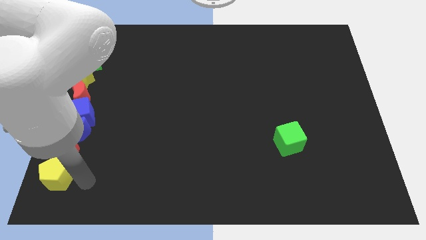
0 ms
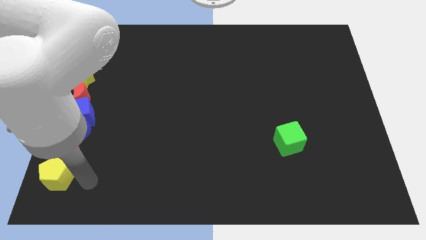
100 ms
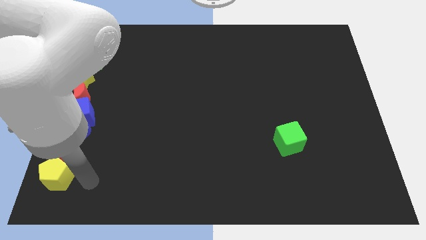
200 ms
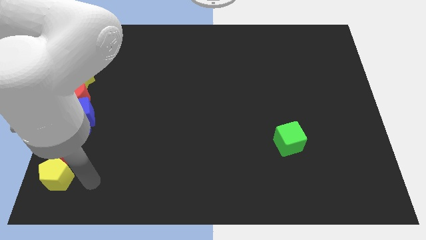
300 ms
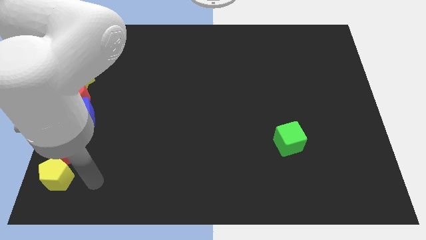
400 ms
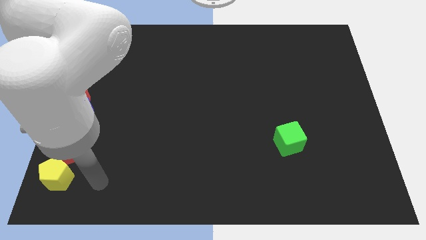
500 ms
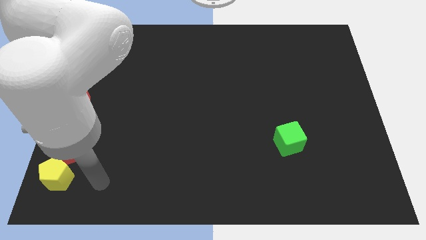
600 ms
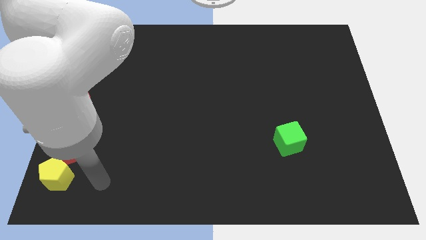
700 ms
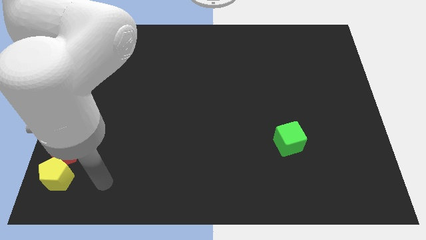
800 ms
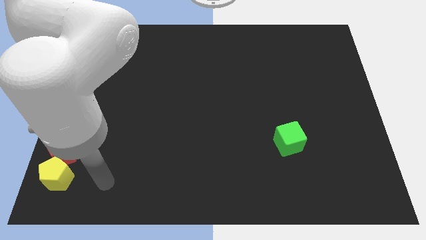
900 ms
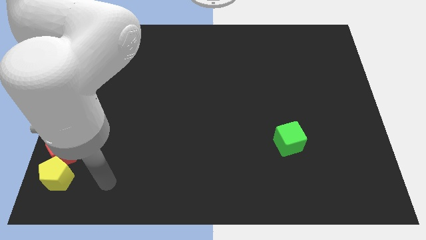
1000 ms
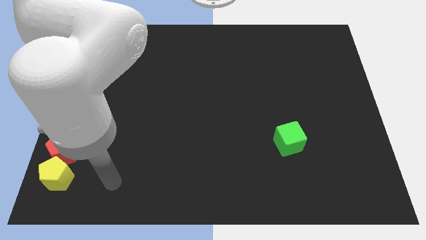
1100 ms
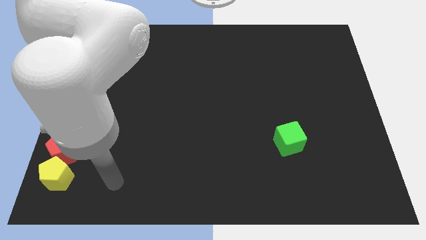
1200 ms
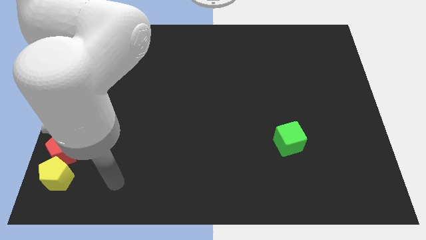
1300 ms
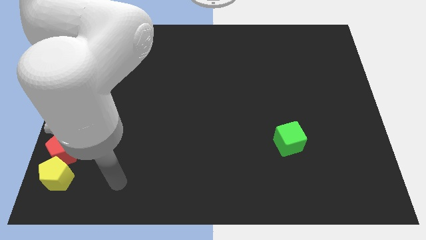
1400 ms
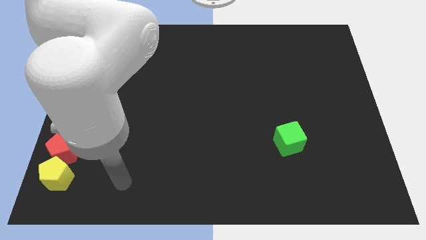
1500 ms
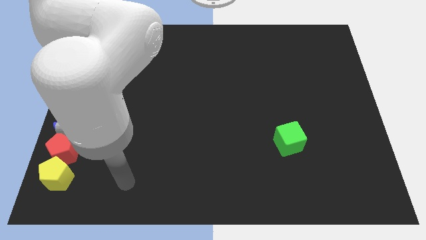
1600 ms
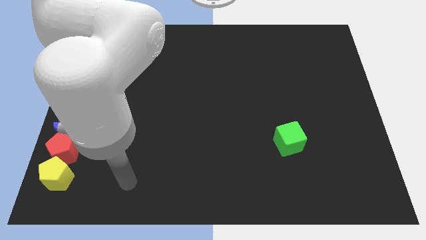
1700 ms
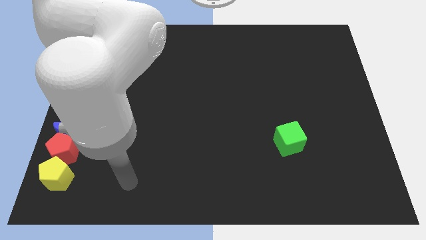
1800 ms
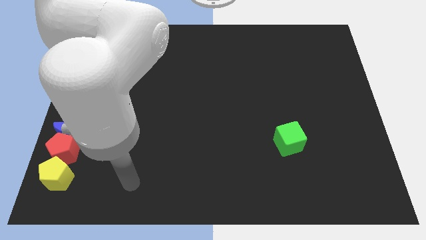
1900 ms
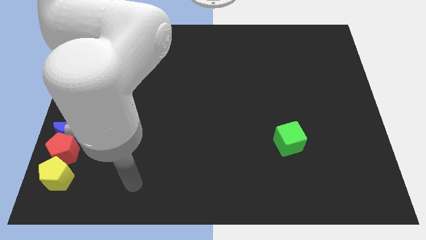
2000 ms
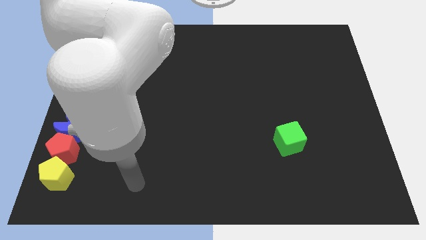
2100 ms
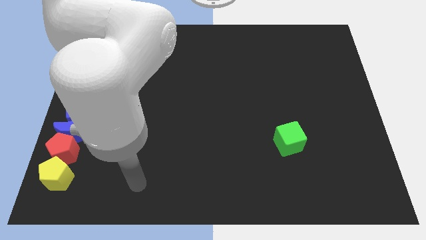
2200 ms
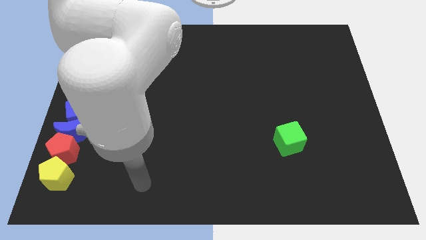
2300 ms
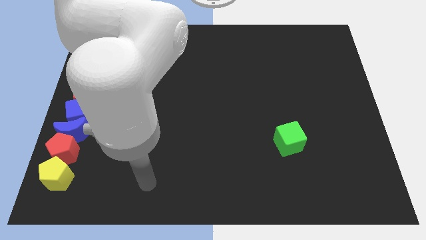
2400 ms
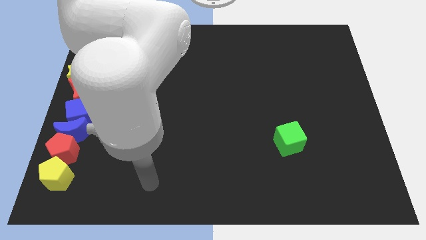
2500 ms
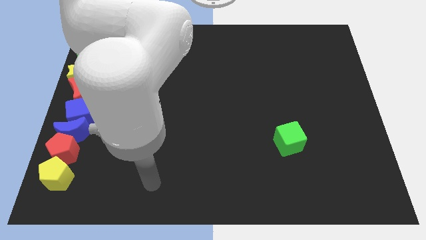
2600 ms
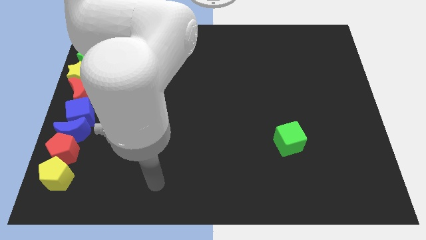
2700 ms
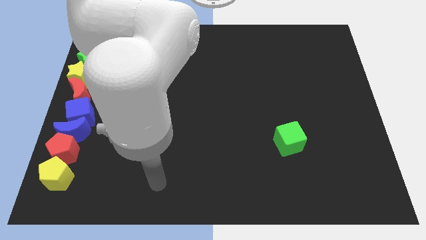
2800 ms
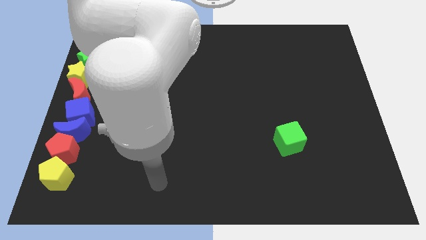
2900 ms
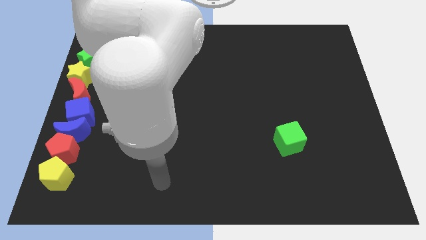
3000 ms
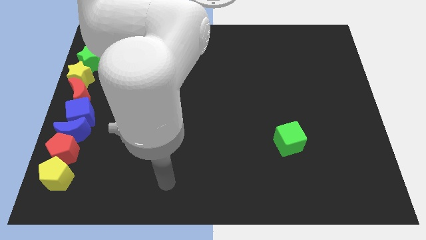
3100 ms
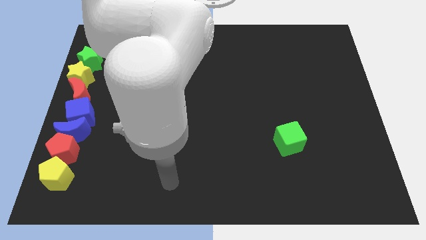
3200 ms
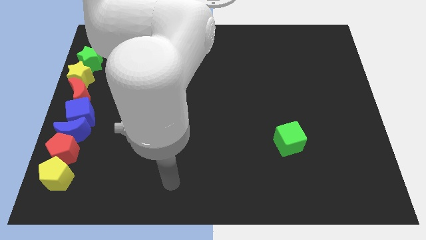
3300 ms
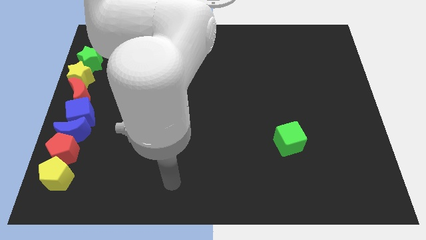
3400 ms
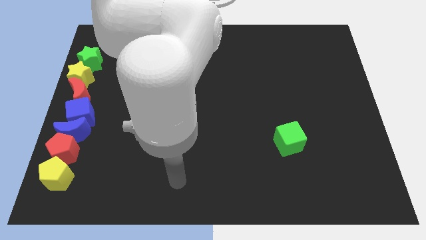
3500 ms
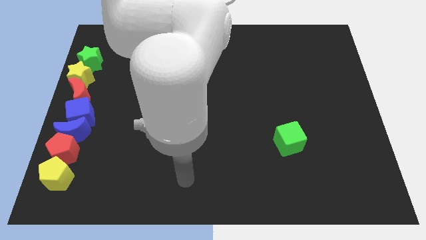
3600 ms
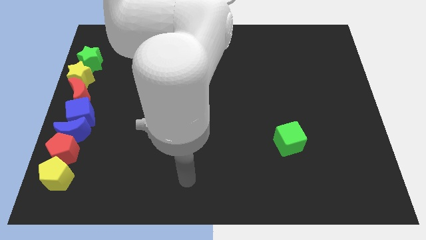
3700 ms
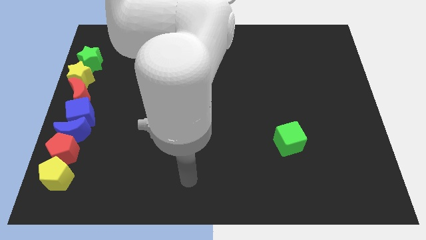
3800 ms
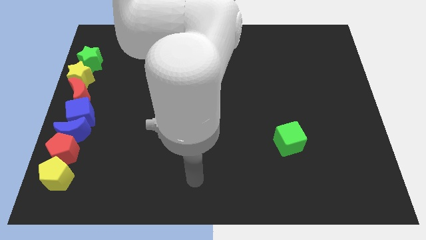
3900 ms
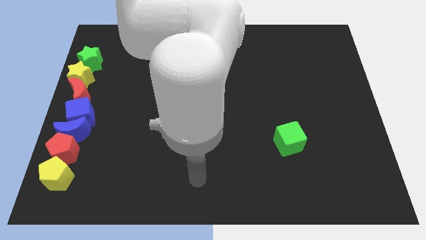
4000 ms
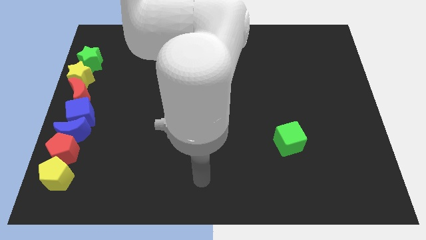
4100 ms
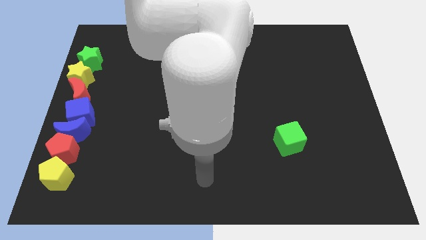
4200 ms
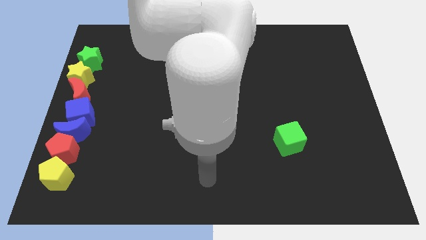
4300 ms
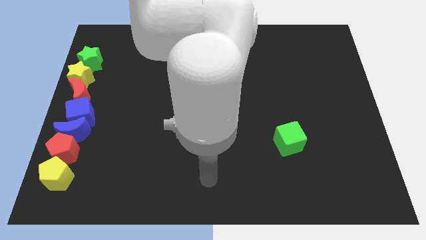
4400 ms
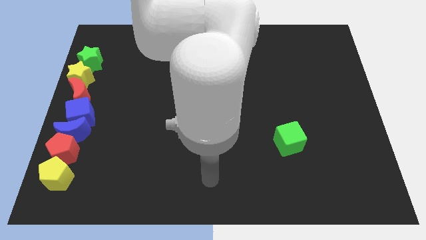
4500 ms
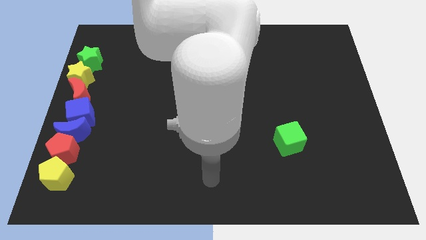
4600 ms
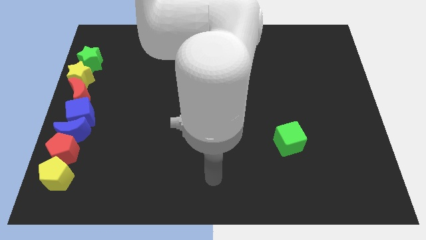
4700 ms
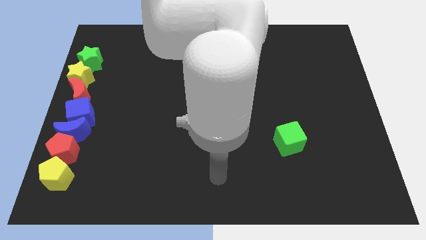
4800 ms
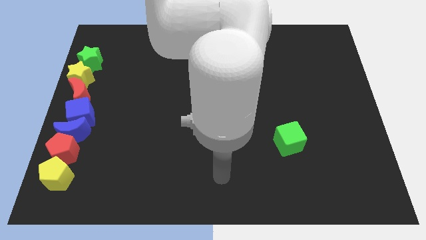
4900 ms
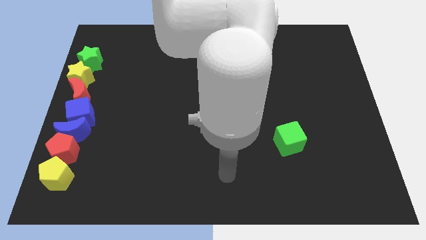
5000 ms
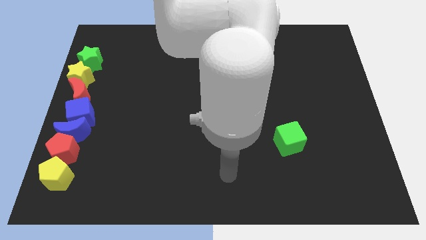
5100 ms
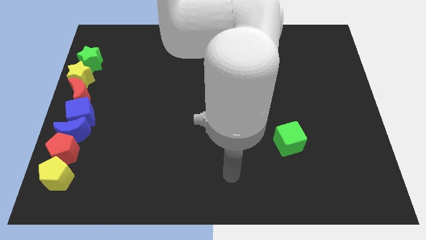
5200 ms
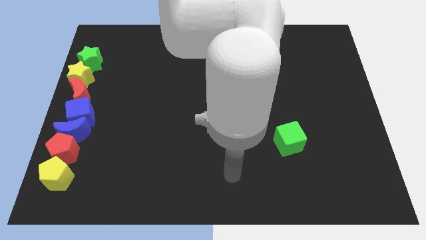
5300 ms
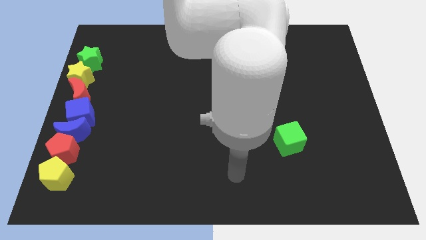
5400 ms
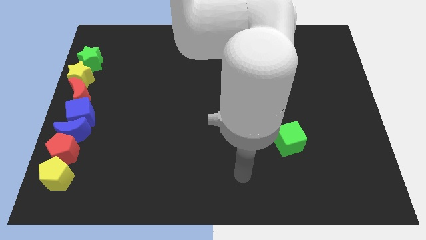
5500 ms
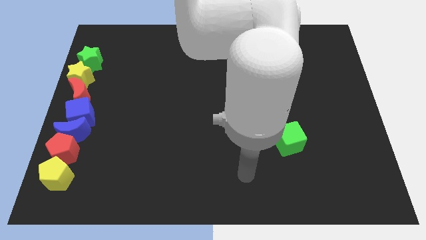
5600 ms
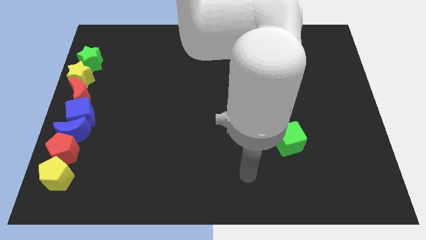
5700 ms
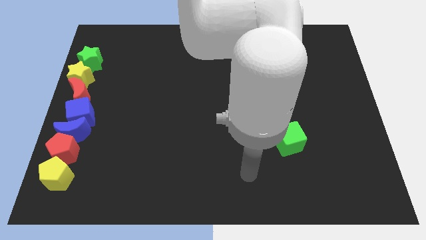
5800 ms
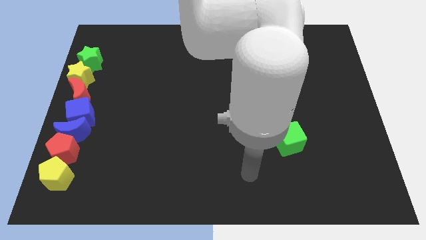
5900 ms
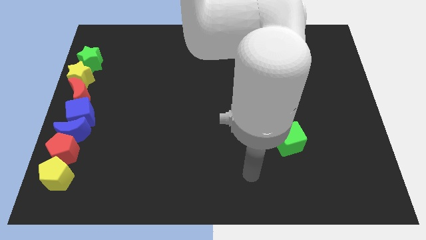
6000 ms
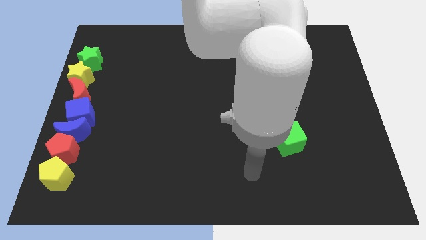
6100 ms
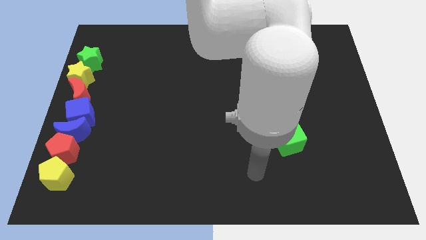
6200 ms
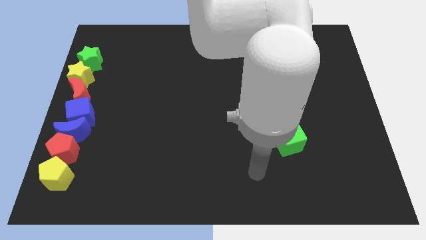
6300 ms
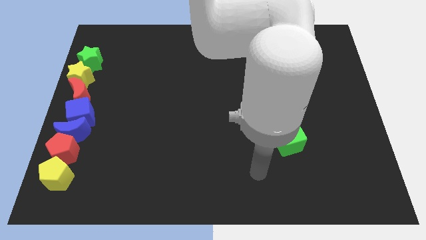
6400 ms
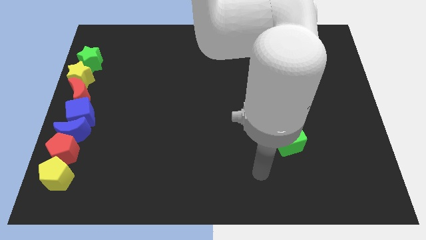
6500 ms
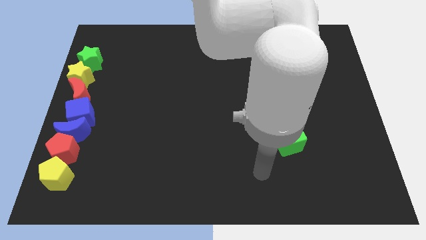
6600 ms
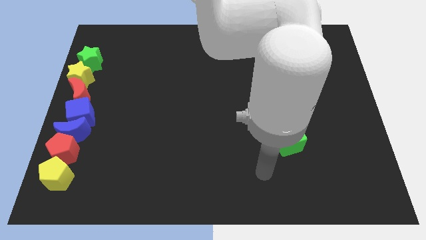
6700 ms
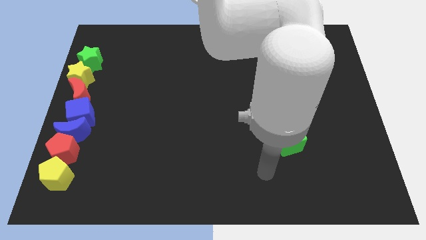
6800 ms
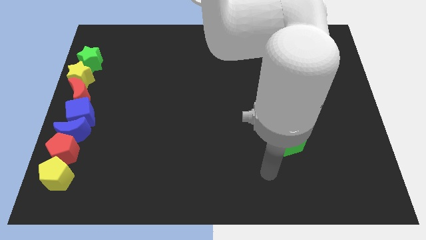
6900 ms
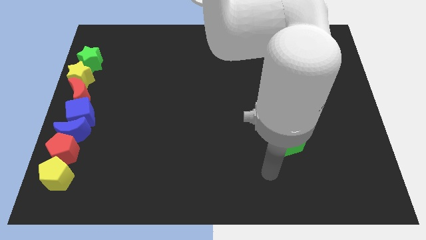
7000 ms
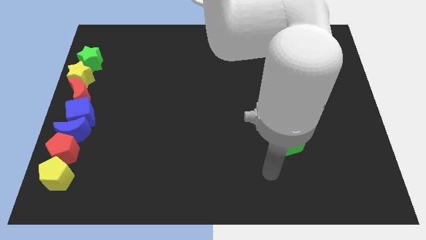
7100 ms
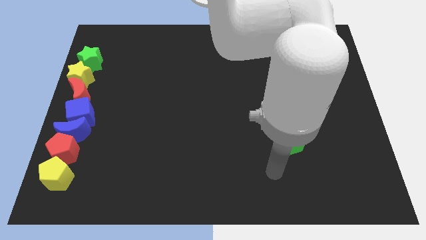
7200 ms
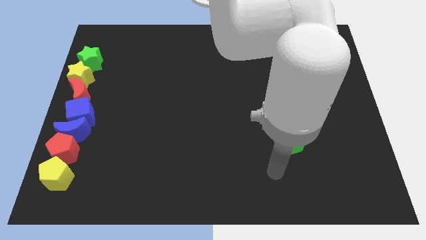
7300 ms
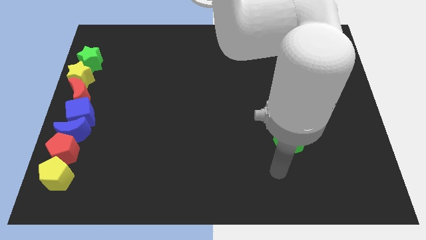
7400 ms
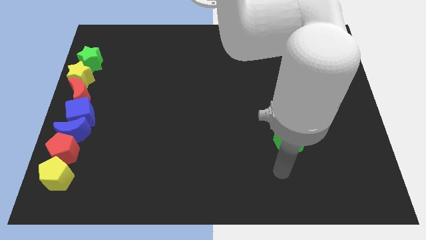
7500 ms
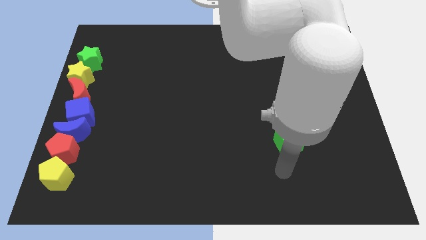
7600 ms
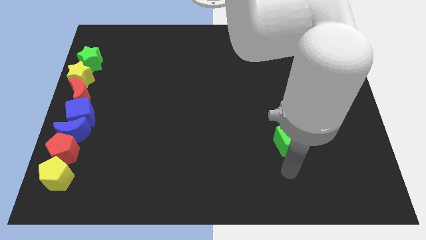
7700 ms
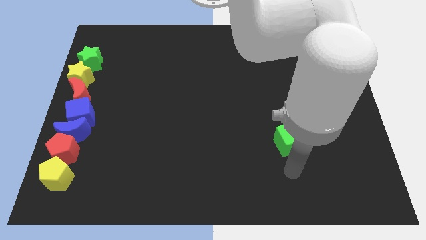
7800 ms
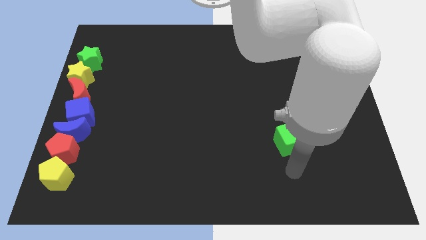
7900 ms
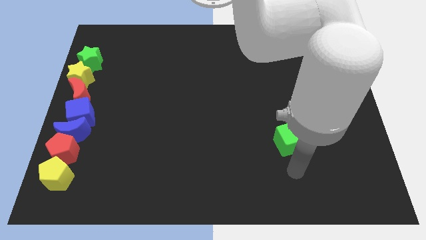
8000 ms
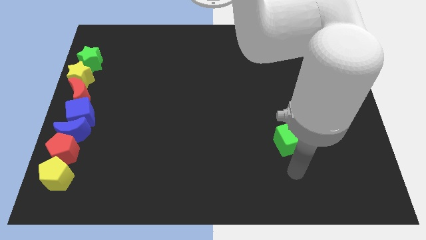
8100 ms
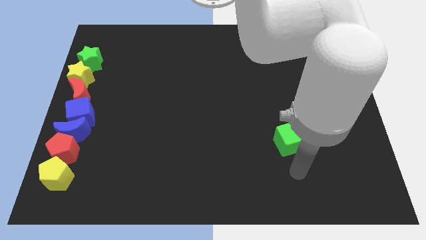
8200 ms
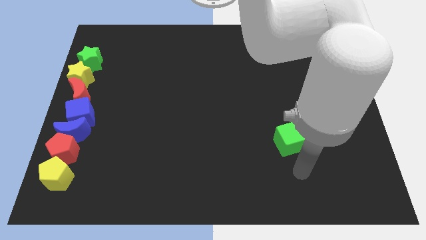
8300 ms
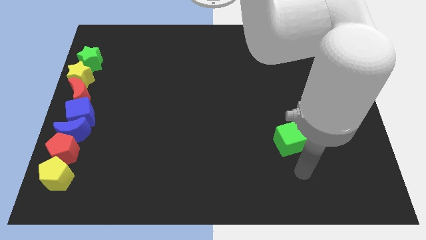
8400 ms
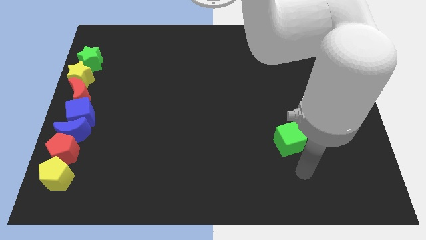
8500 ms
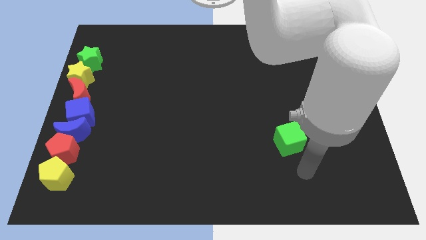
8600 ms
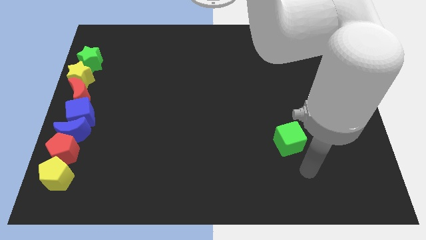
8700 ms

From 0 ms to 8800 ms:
move your arm to the bottom of the green cube

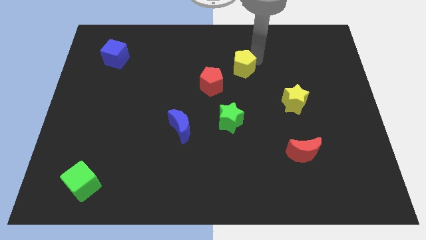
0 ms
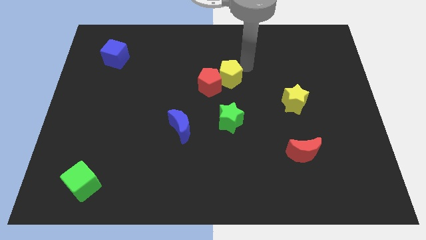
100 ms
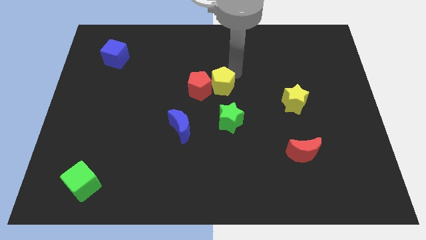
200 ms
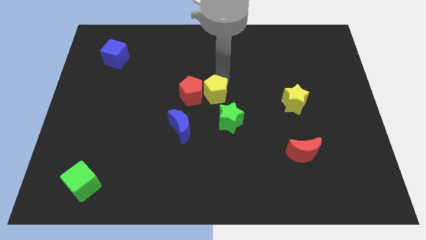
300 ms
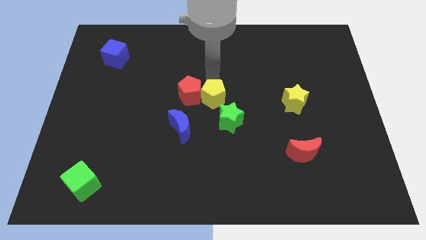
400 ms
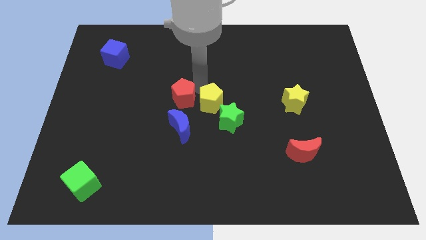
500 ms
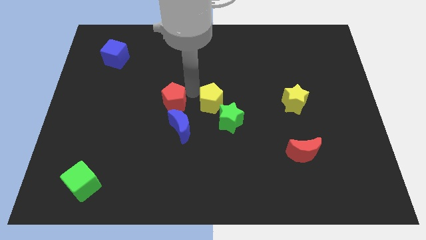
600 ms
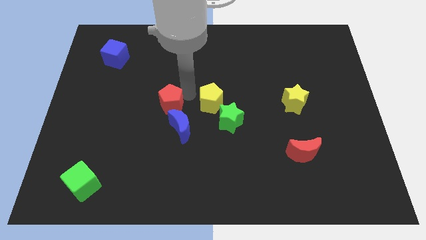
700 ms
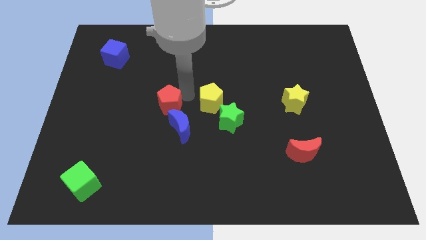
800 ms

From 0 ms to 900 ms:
push the red pentagon diagonally top left to the green star
